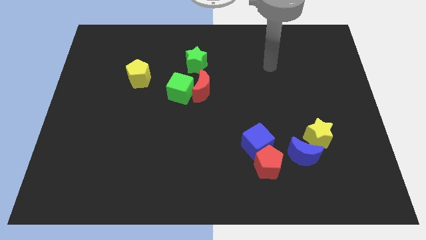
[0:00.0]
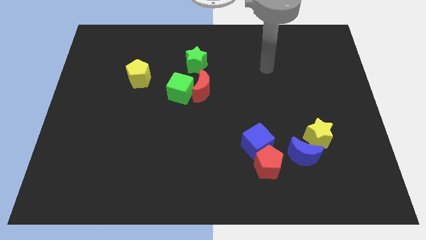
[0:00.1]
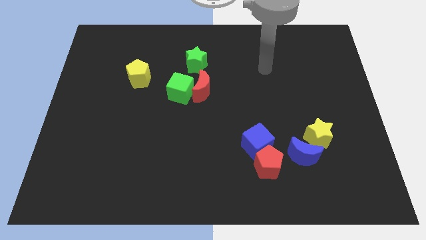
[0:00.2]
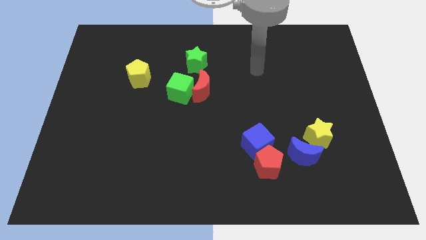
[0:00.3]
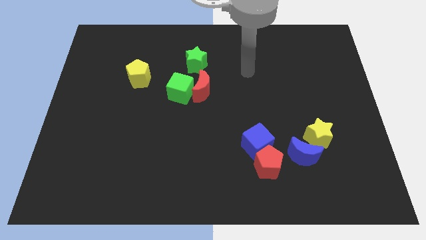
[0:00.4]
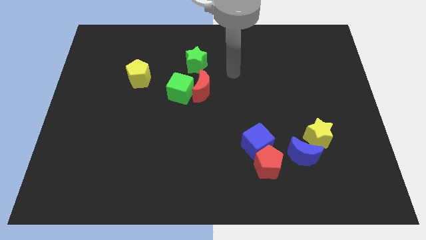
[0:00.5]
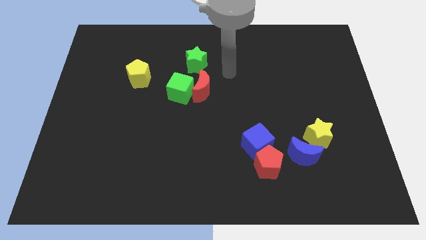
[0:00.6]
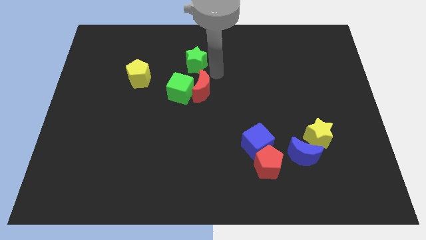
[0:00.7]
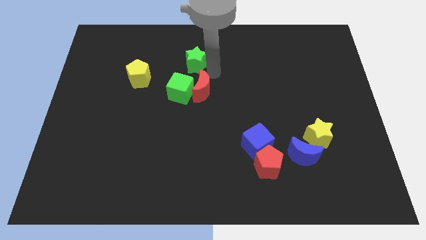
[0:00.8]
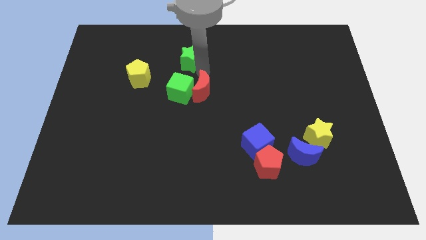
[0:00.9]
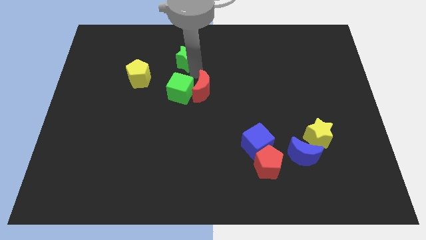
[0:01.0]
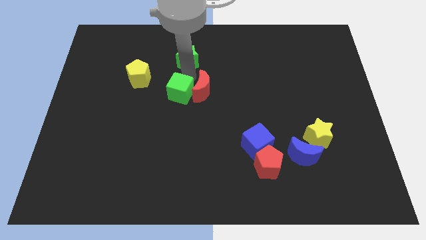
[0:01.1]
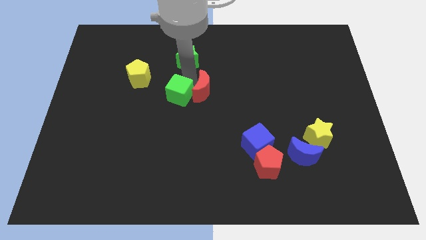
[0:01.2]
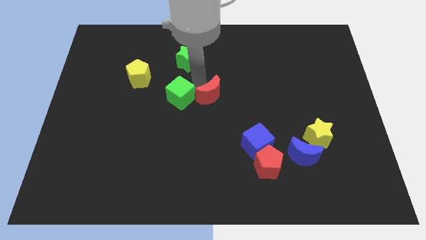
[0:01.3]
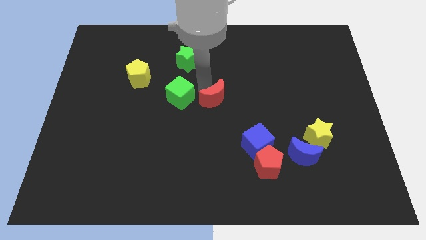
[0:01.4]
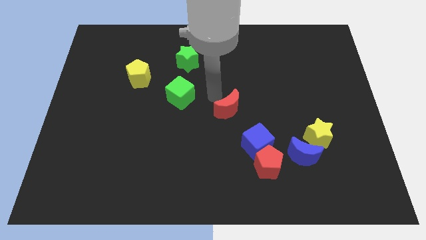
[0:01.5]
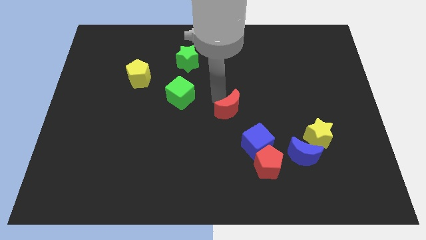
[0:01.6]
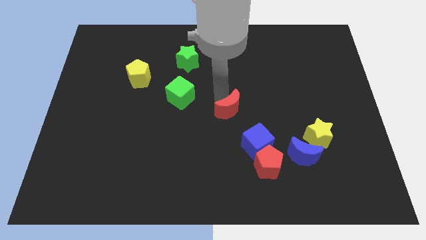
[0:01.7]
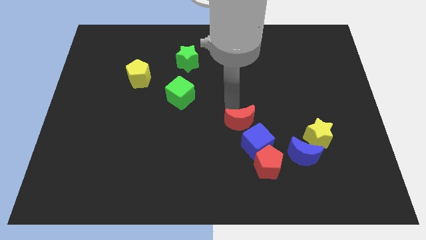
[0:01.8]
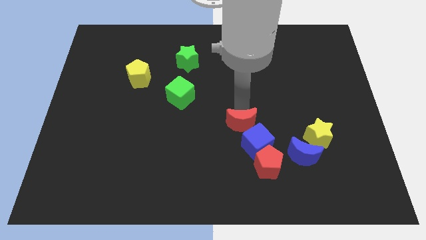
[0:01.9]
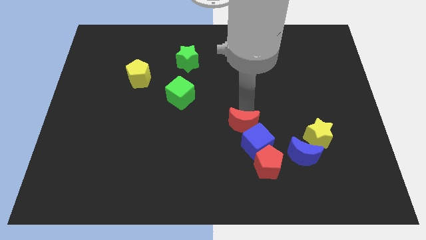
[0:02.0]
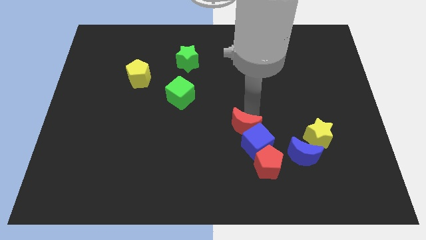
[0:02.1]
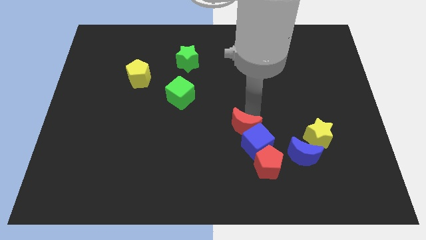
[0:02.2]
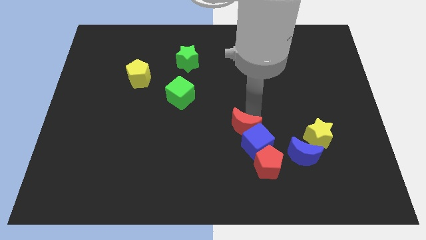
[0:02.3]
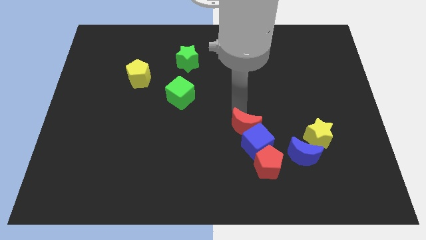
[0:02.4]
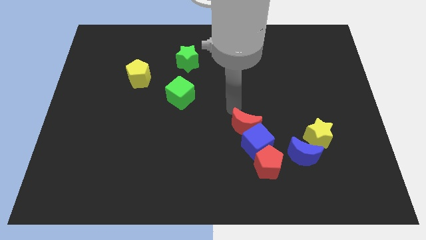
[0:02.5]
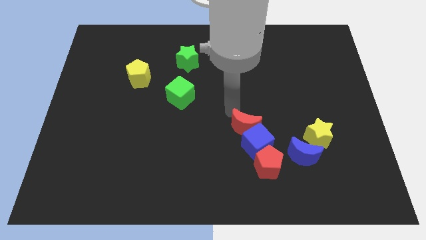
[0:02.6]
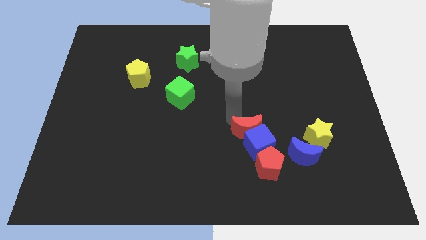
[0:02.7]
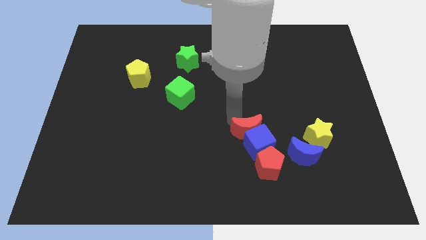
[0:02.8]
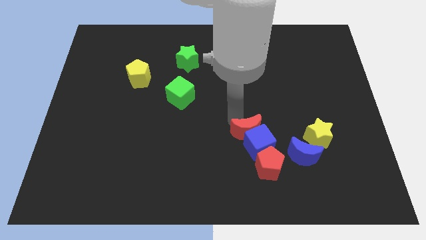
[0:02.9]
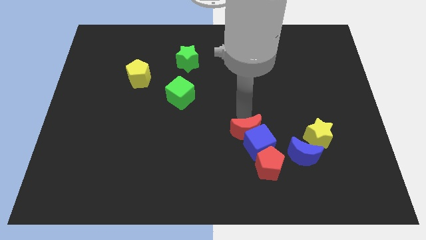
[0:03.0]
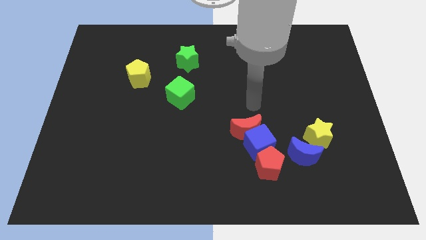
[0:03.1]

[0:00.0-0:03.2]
move the red crescent into the blue cube

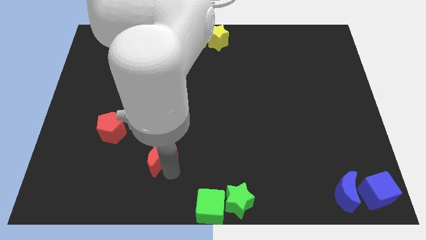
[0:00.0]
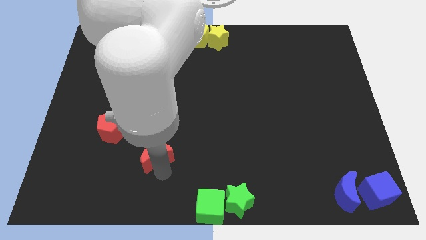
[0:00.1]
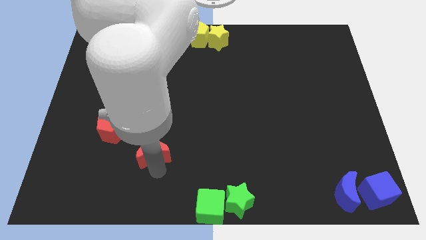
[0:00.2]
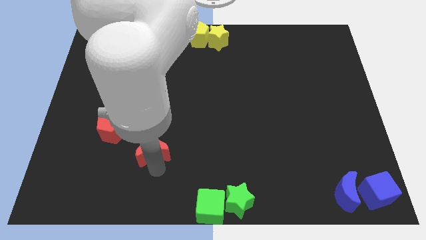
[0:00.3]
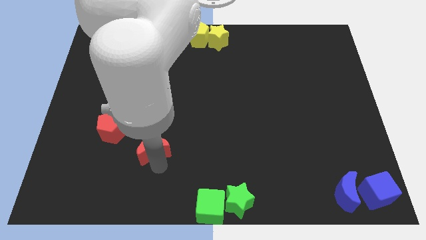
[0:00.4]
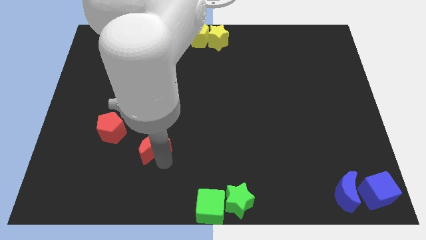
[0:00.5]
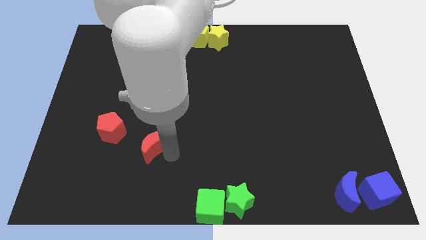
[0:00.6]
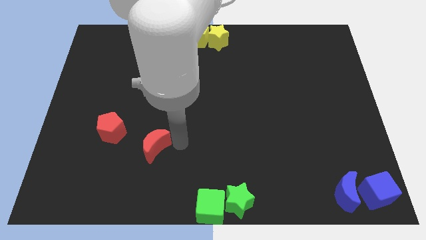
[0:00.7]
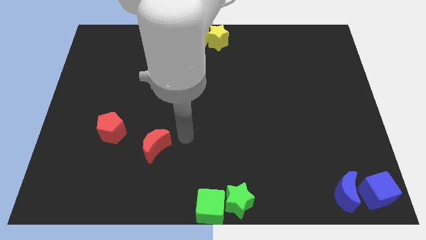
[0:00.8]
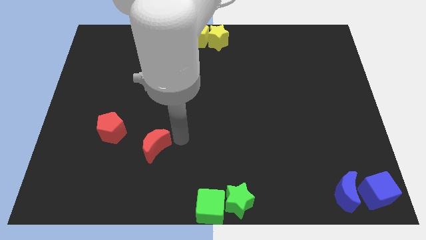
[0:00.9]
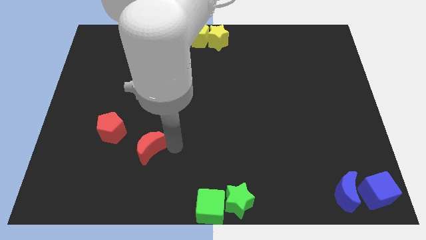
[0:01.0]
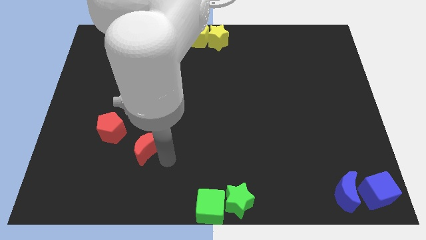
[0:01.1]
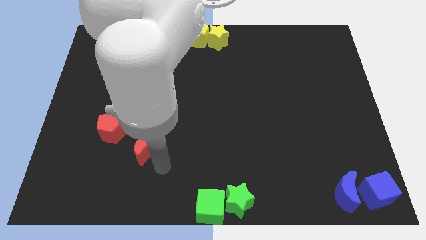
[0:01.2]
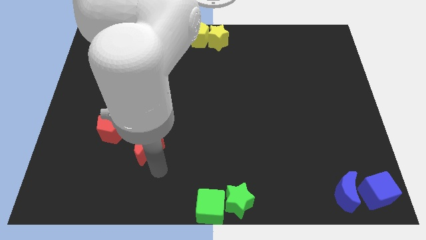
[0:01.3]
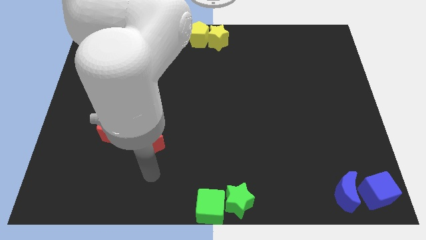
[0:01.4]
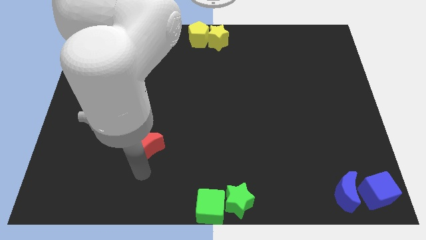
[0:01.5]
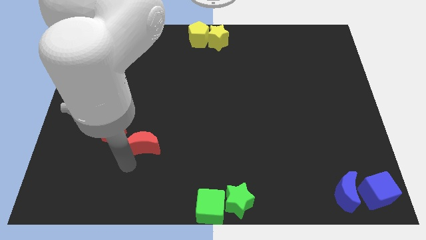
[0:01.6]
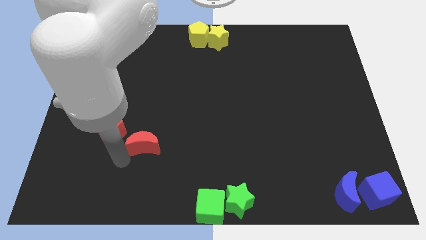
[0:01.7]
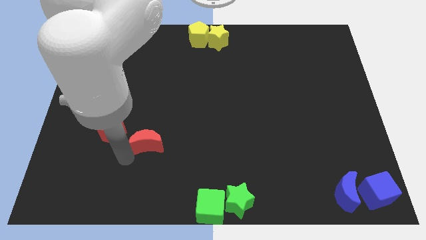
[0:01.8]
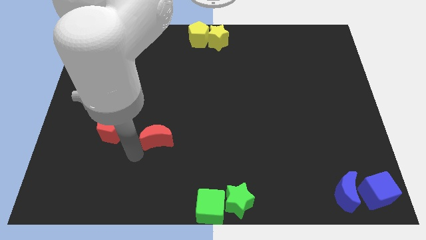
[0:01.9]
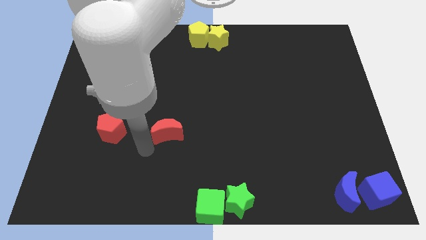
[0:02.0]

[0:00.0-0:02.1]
slide red moon parallel to red pentagon

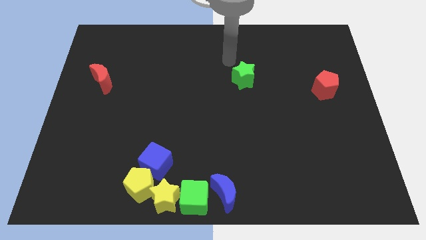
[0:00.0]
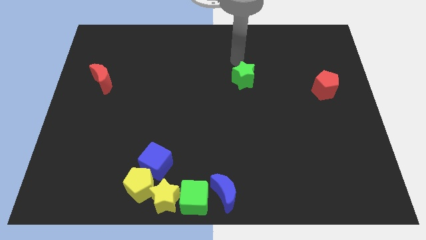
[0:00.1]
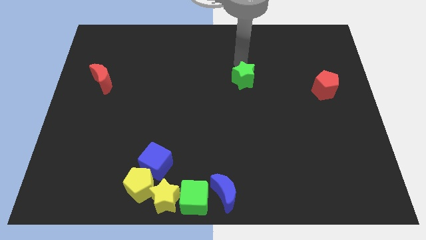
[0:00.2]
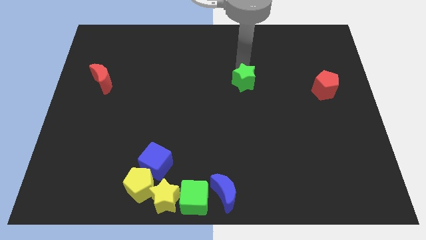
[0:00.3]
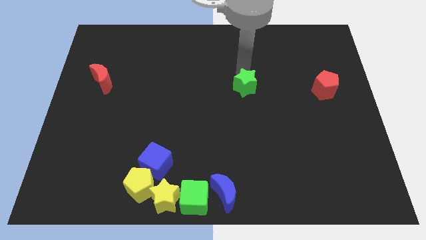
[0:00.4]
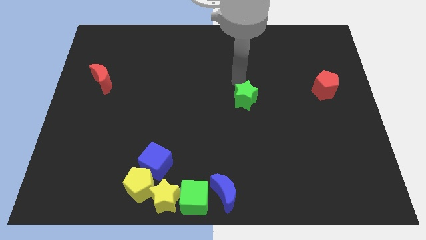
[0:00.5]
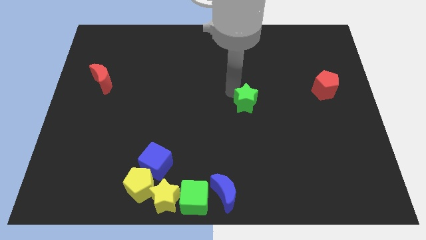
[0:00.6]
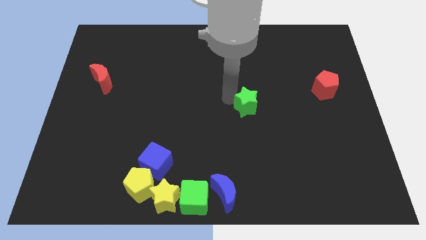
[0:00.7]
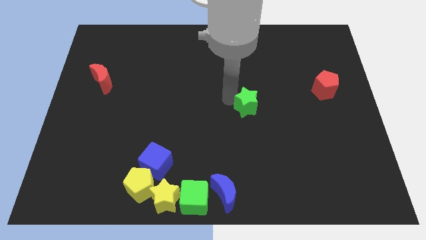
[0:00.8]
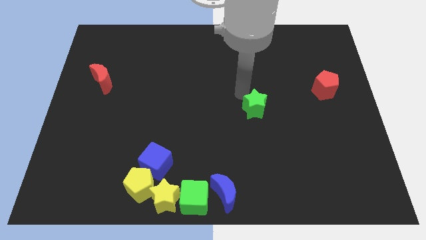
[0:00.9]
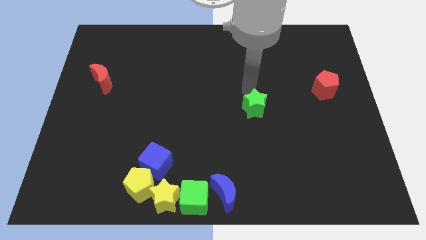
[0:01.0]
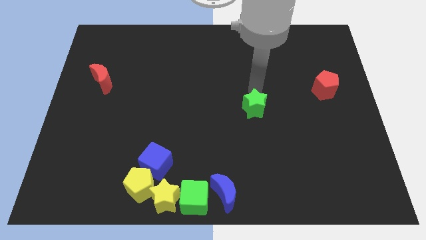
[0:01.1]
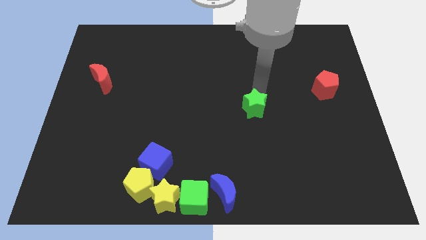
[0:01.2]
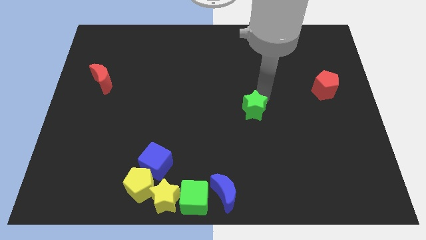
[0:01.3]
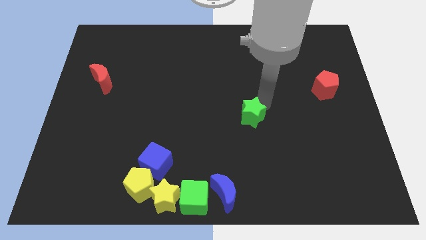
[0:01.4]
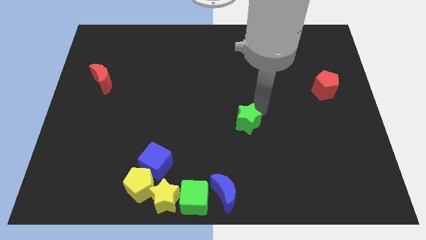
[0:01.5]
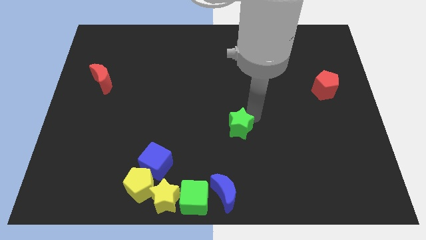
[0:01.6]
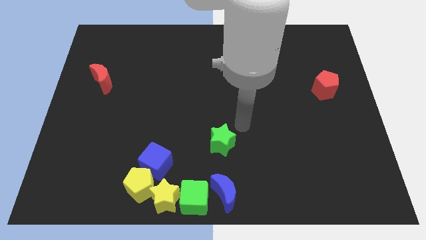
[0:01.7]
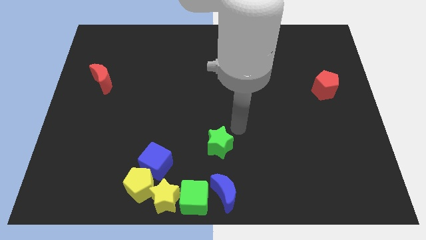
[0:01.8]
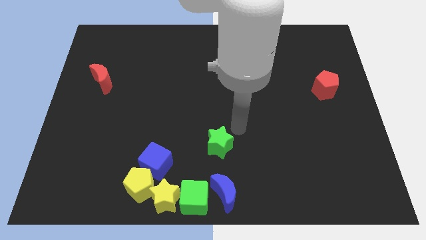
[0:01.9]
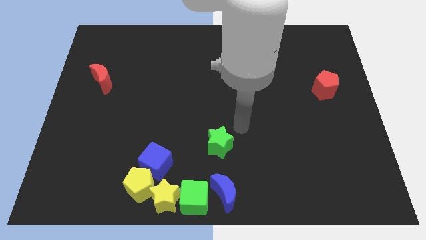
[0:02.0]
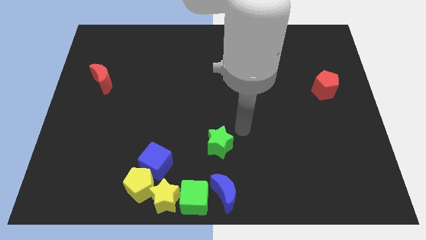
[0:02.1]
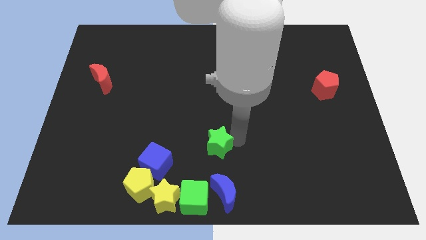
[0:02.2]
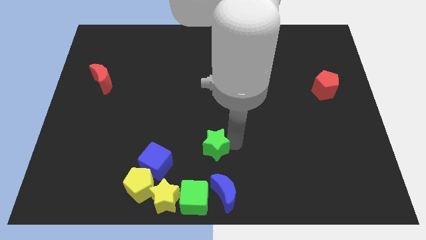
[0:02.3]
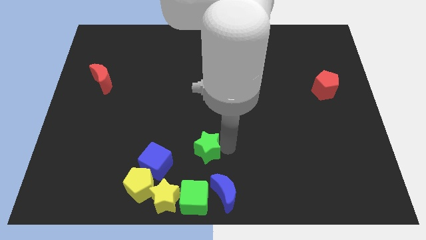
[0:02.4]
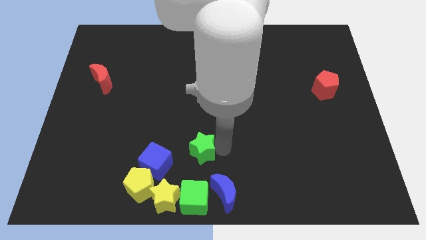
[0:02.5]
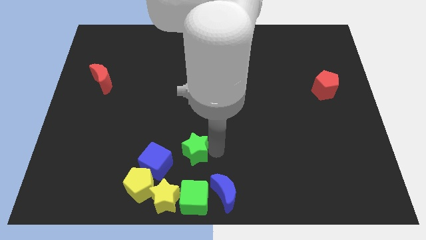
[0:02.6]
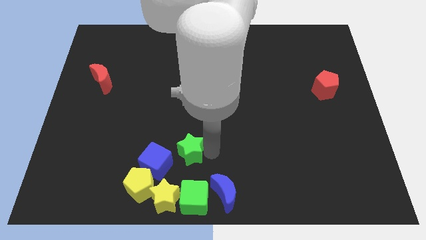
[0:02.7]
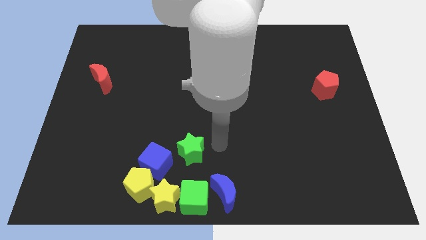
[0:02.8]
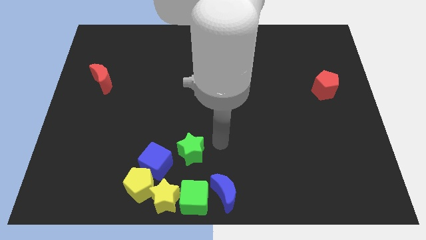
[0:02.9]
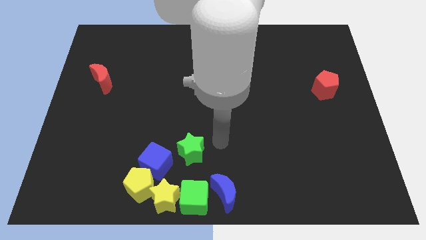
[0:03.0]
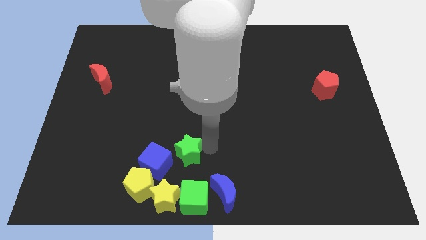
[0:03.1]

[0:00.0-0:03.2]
put the green star vertically above the green cube

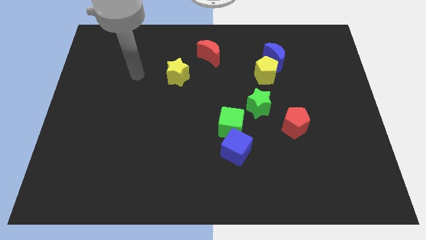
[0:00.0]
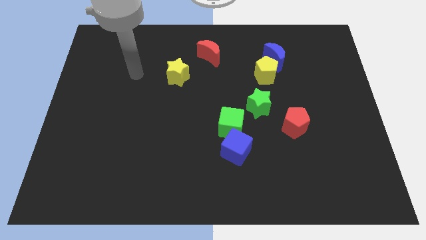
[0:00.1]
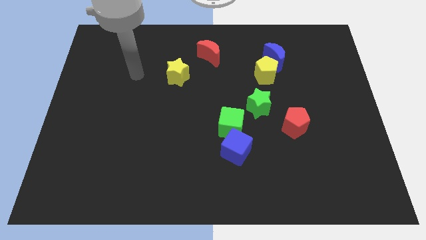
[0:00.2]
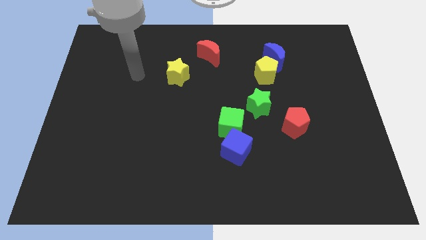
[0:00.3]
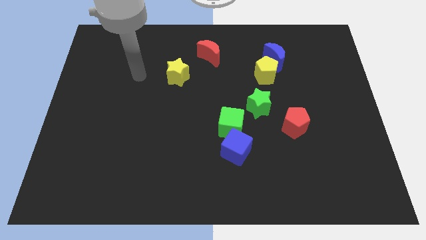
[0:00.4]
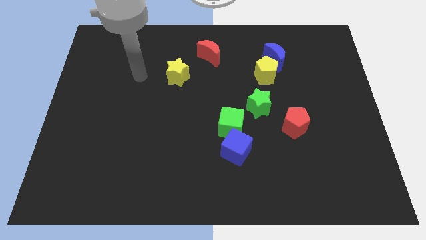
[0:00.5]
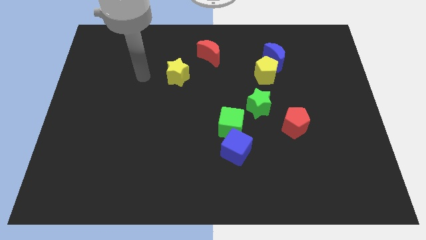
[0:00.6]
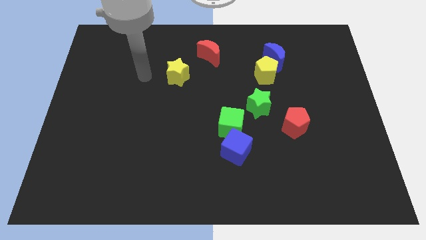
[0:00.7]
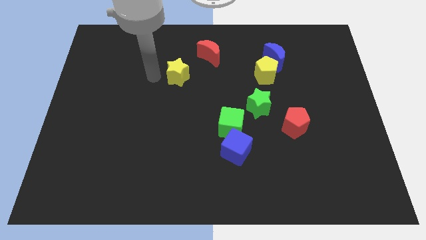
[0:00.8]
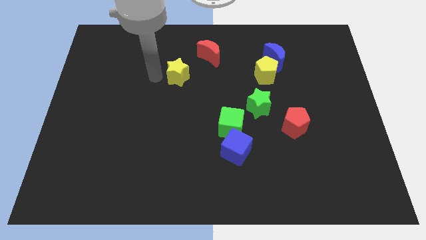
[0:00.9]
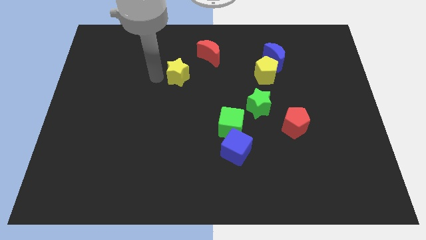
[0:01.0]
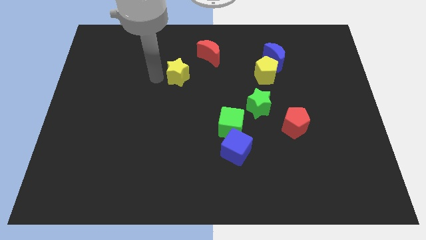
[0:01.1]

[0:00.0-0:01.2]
move your hand at the left side of the yellow star
